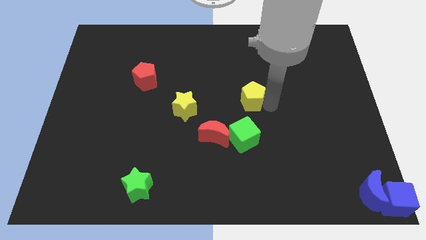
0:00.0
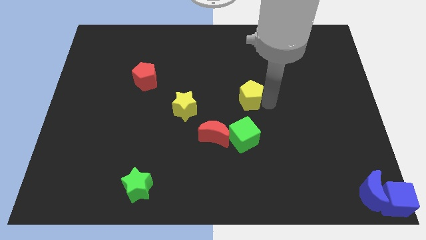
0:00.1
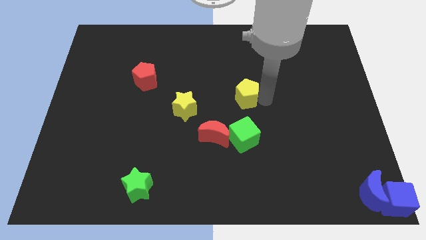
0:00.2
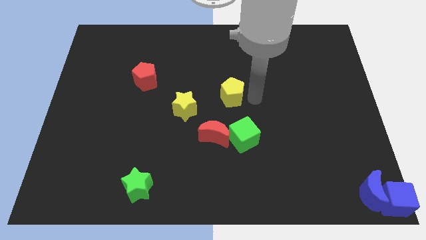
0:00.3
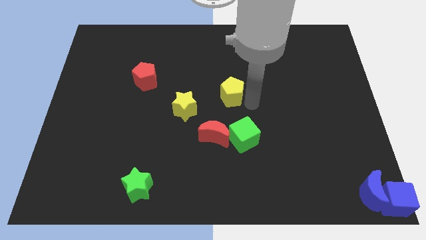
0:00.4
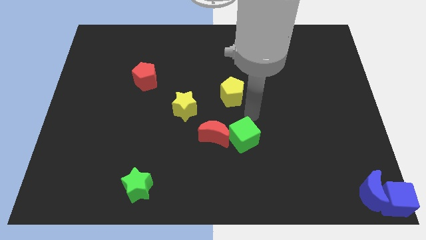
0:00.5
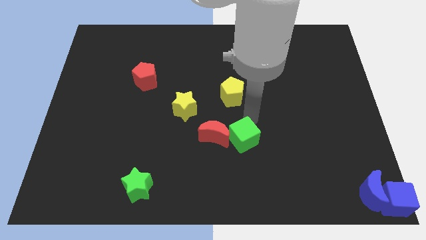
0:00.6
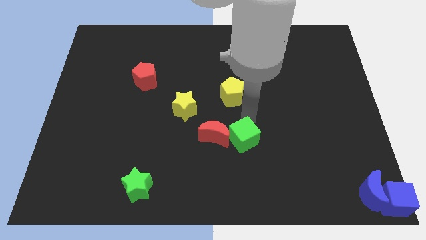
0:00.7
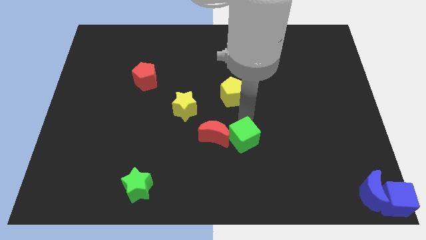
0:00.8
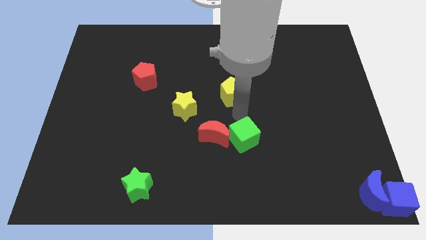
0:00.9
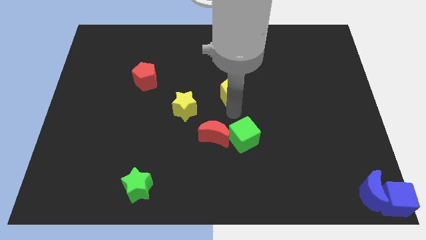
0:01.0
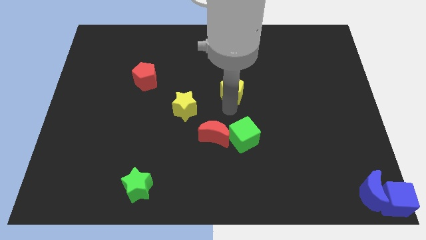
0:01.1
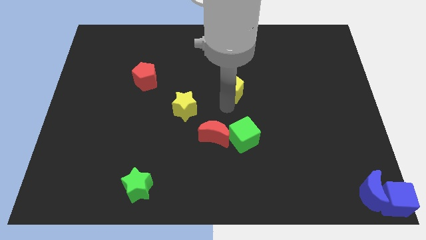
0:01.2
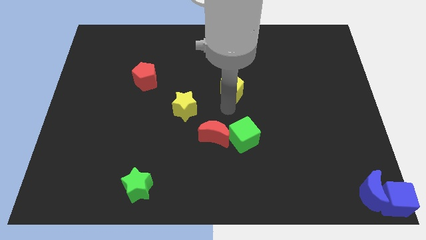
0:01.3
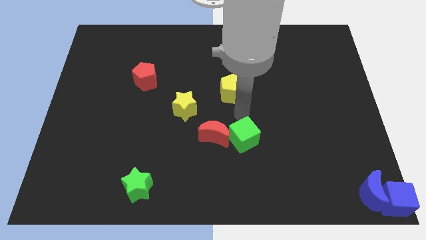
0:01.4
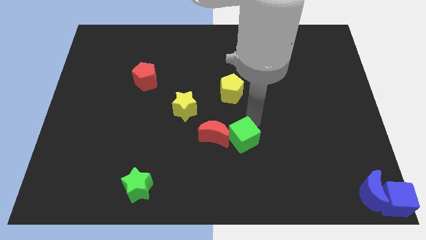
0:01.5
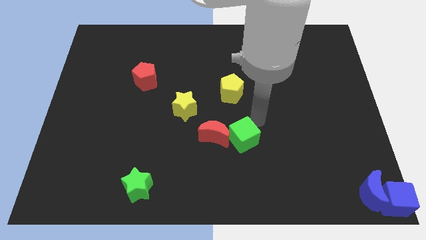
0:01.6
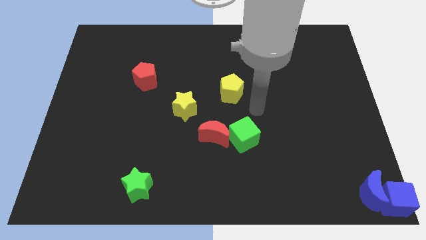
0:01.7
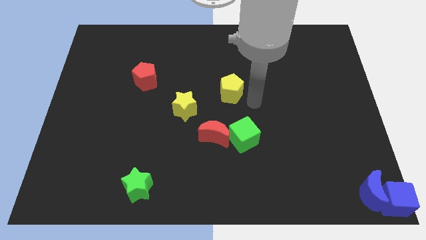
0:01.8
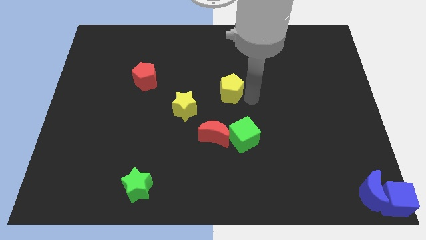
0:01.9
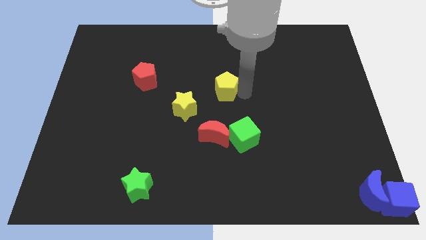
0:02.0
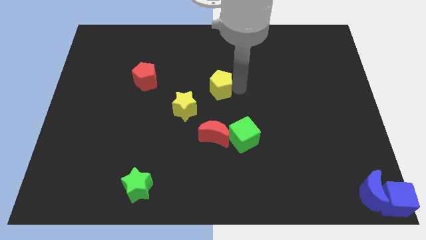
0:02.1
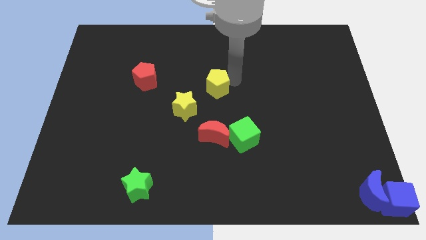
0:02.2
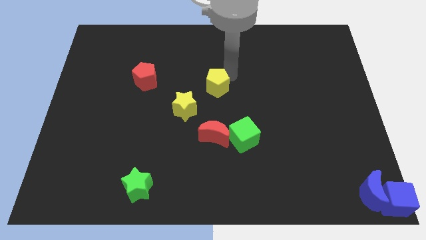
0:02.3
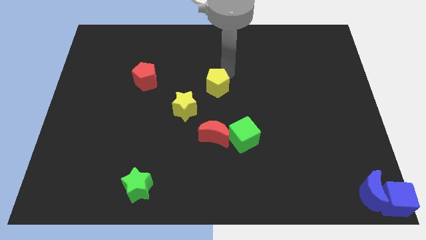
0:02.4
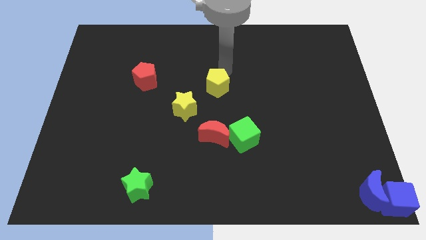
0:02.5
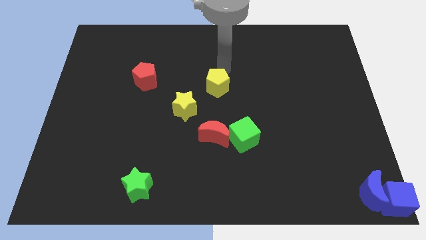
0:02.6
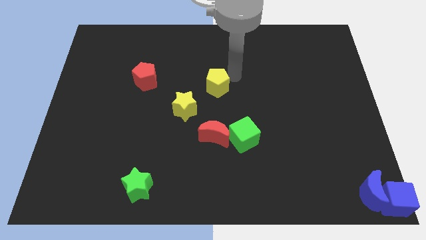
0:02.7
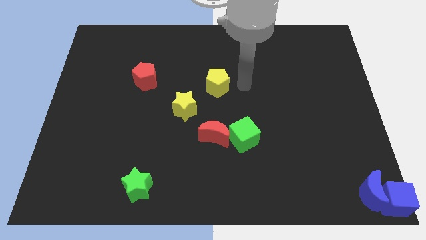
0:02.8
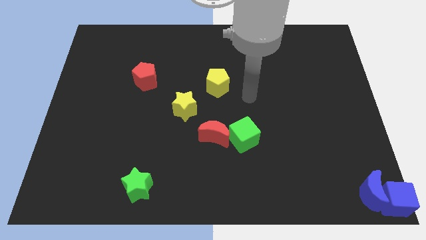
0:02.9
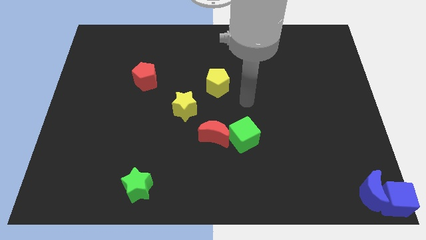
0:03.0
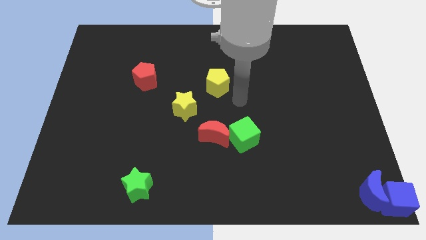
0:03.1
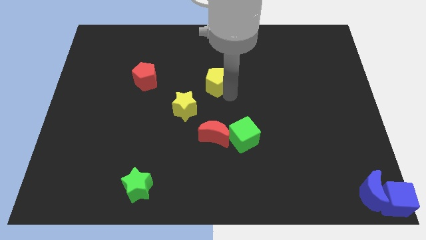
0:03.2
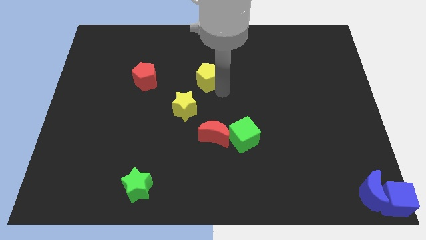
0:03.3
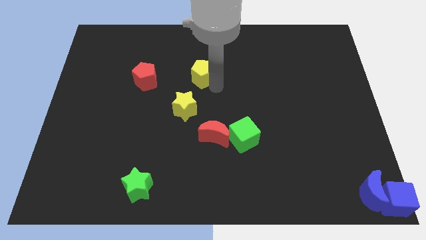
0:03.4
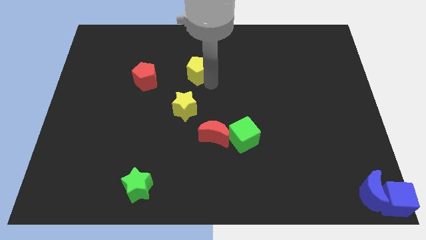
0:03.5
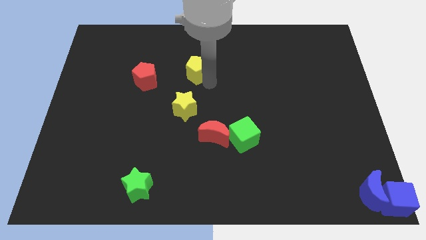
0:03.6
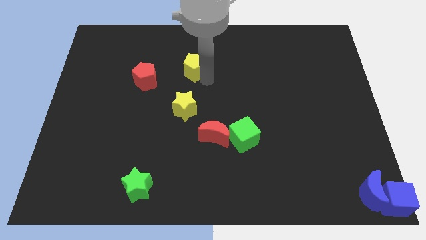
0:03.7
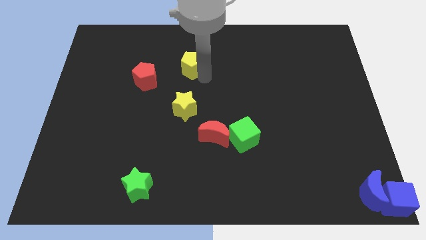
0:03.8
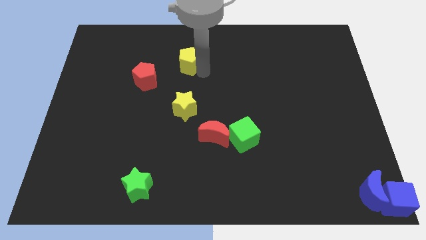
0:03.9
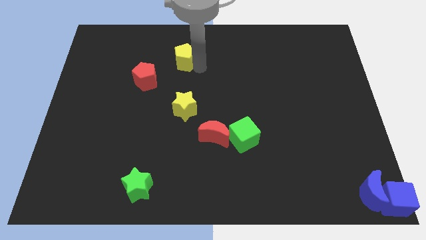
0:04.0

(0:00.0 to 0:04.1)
move the yellow pentagon to the top of the yellow star

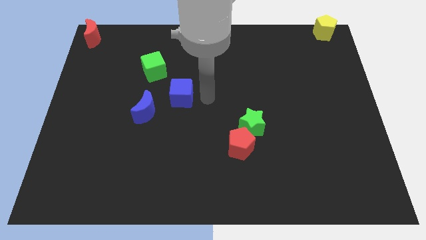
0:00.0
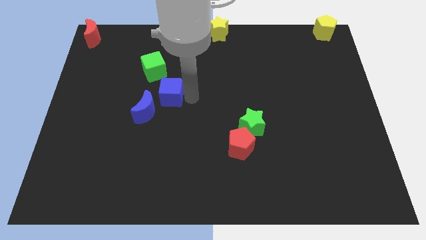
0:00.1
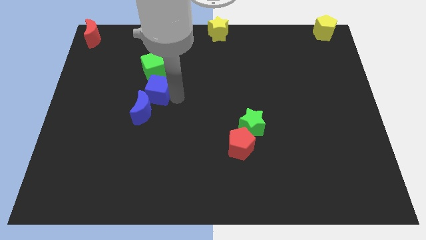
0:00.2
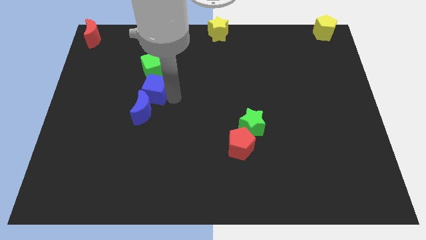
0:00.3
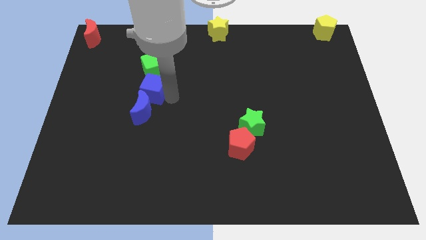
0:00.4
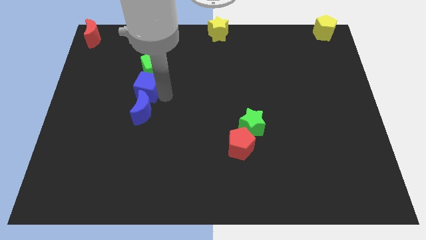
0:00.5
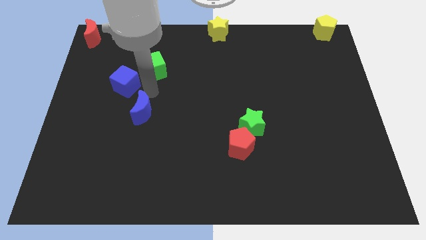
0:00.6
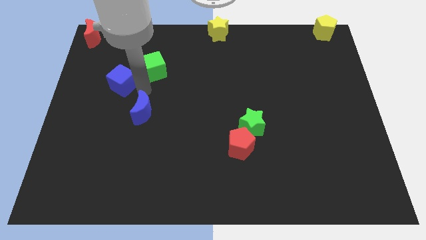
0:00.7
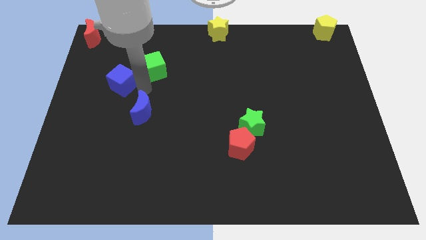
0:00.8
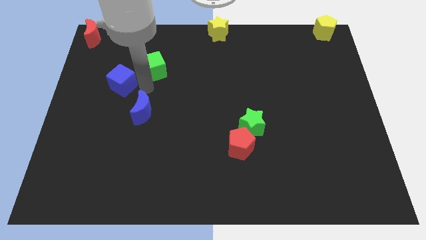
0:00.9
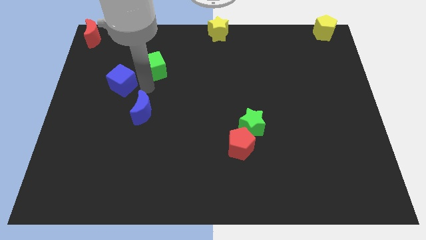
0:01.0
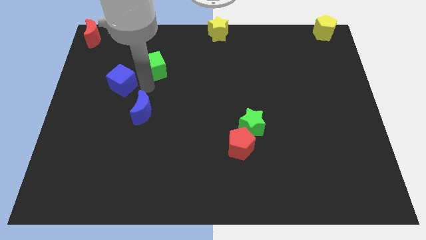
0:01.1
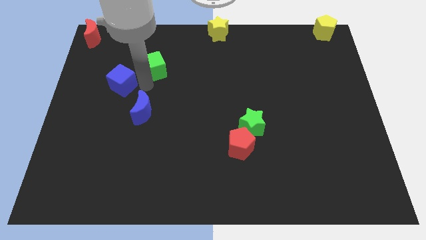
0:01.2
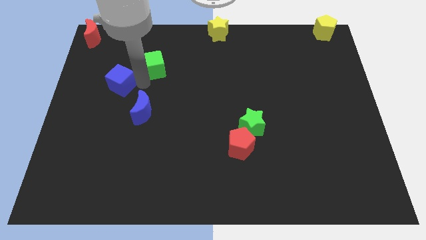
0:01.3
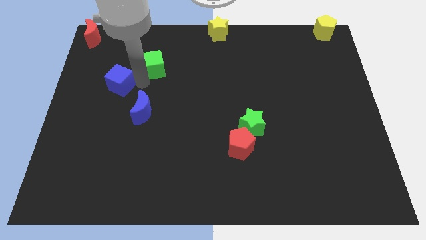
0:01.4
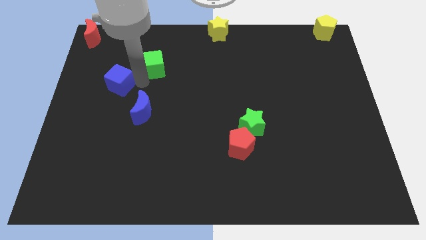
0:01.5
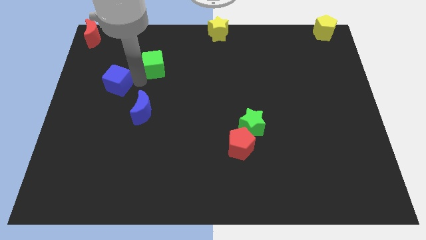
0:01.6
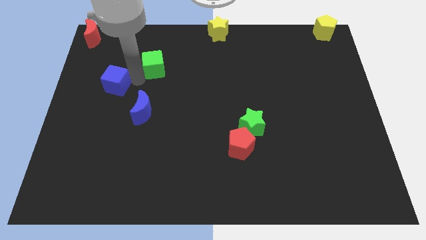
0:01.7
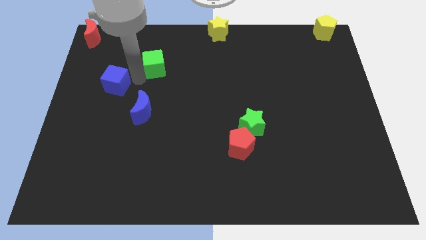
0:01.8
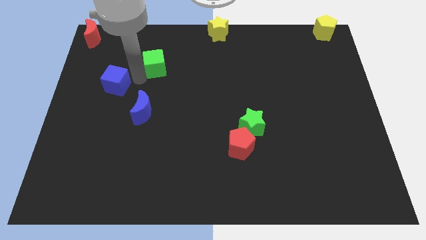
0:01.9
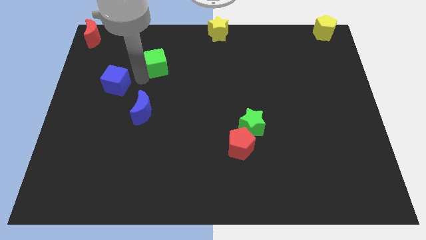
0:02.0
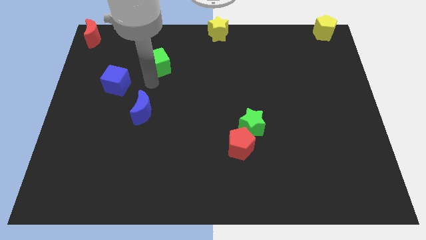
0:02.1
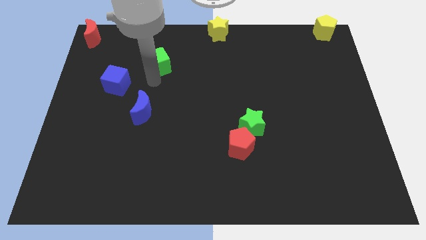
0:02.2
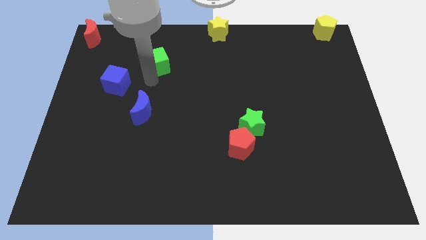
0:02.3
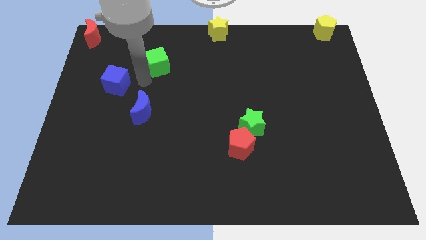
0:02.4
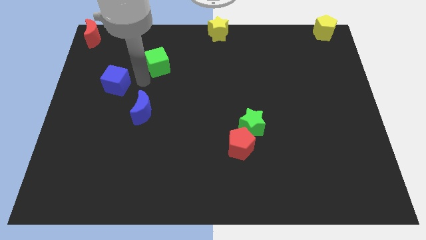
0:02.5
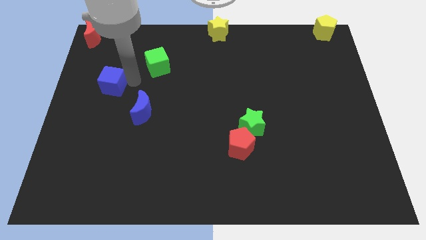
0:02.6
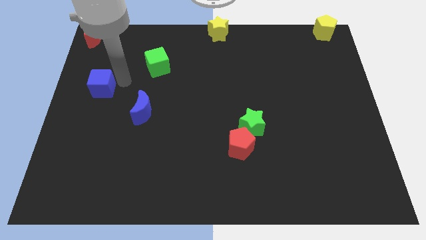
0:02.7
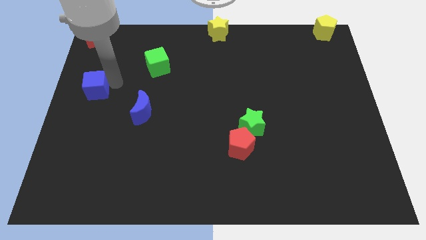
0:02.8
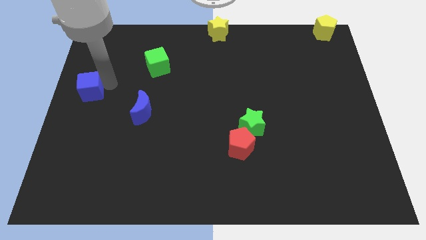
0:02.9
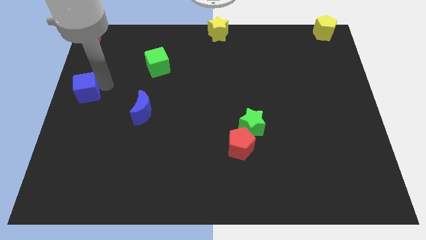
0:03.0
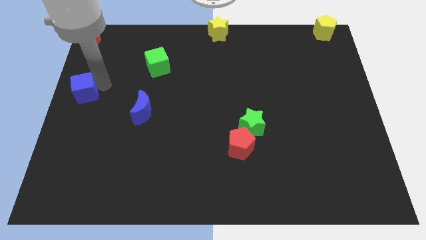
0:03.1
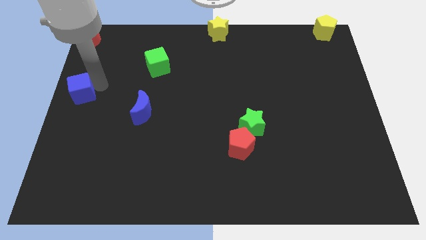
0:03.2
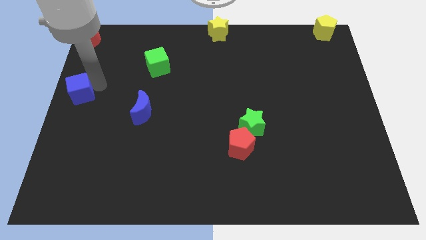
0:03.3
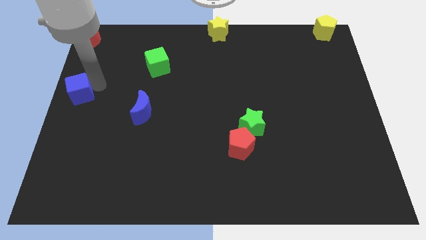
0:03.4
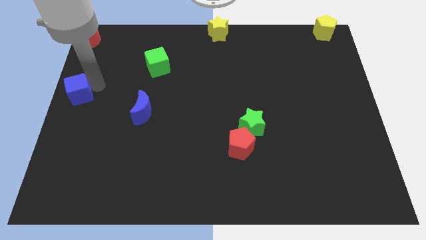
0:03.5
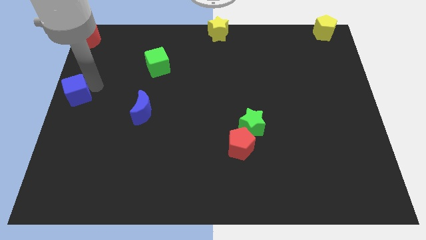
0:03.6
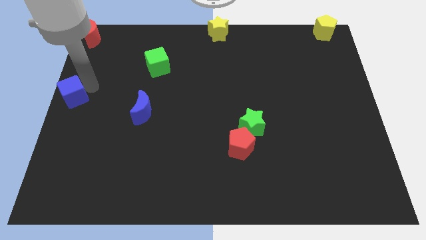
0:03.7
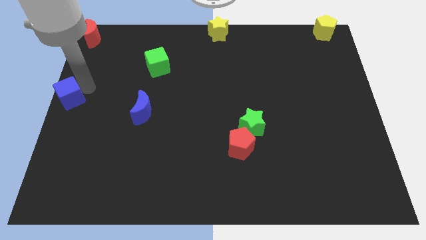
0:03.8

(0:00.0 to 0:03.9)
move away blue cube from green cube

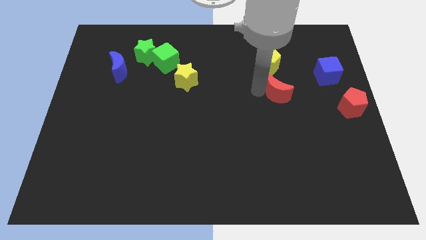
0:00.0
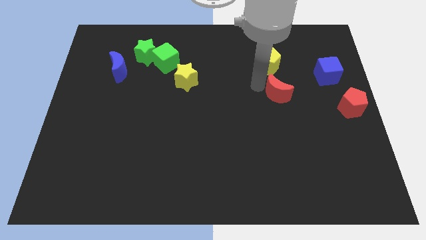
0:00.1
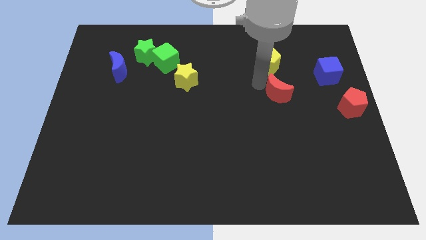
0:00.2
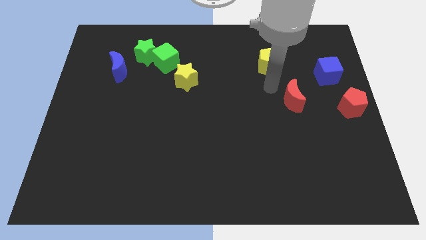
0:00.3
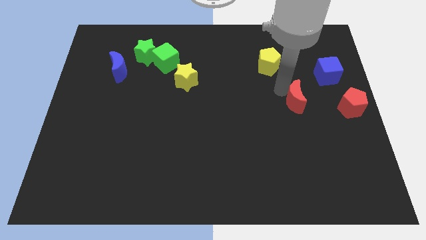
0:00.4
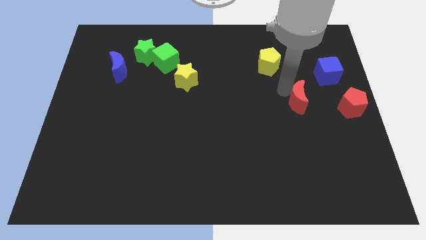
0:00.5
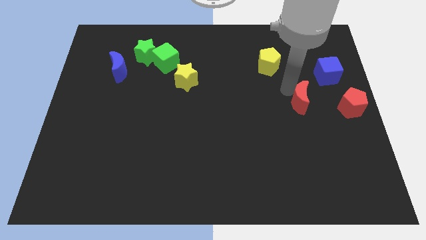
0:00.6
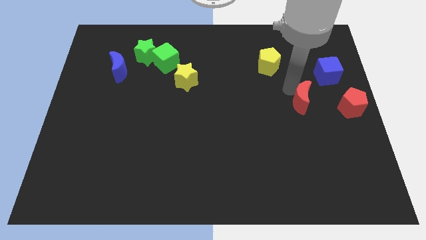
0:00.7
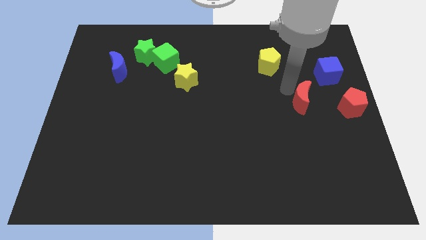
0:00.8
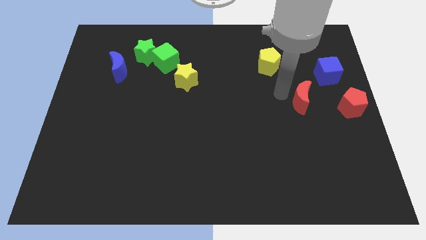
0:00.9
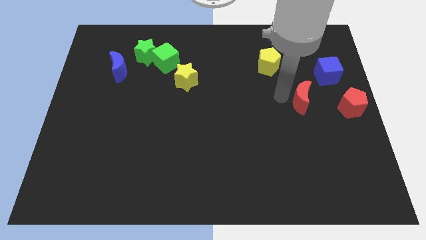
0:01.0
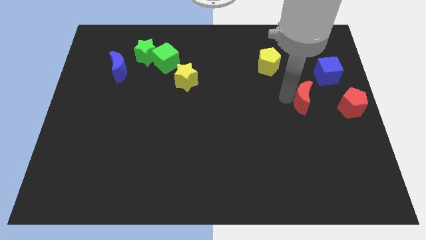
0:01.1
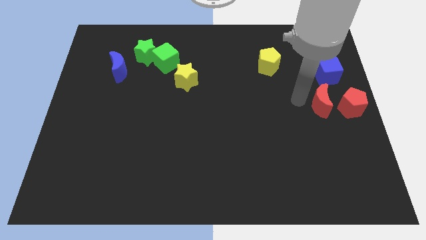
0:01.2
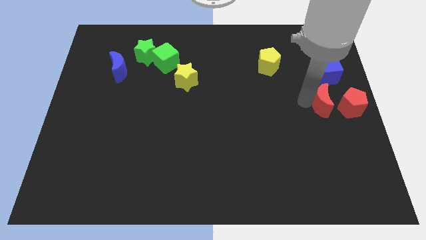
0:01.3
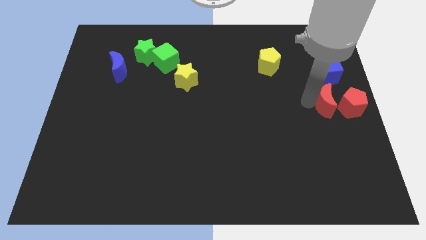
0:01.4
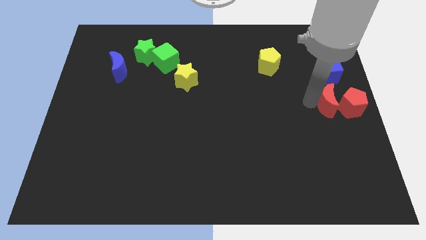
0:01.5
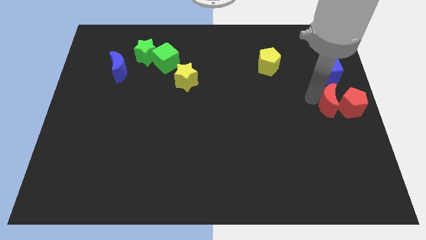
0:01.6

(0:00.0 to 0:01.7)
place the red moon to the left side of the red pentagon
